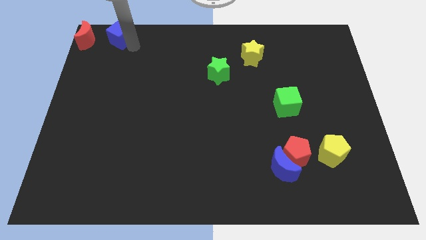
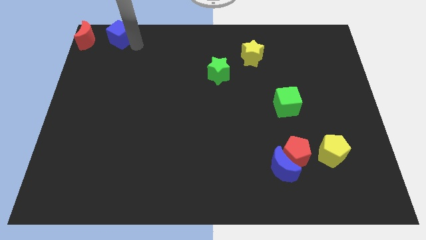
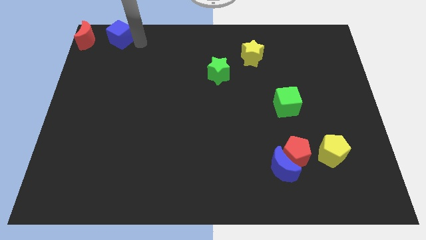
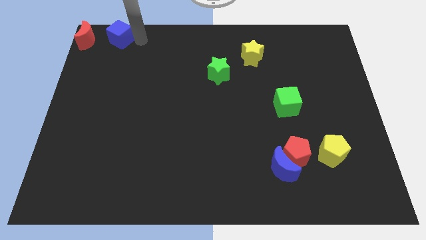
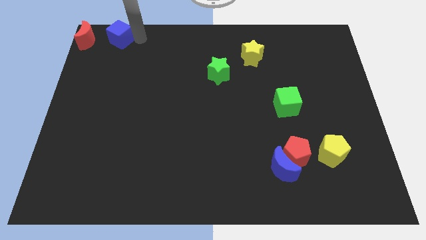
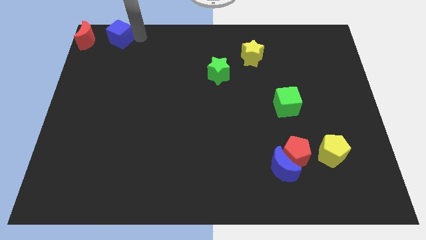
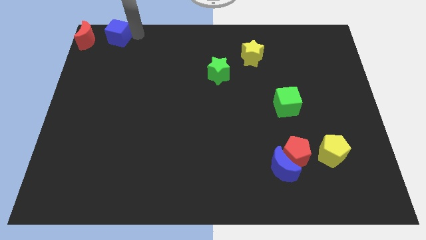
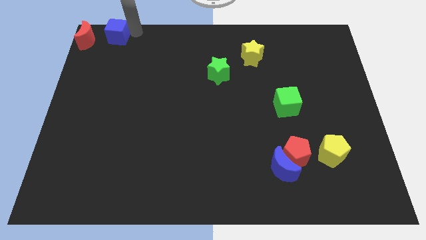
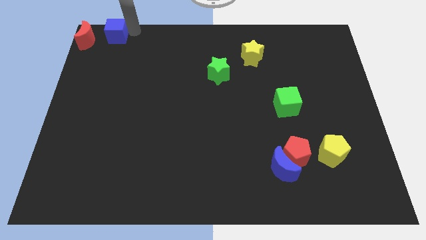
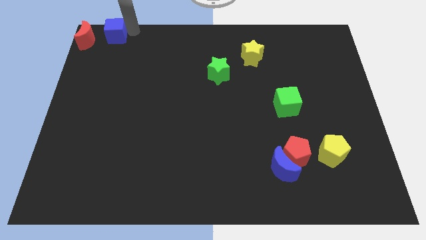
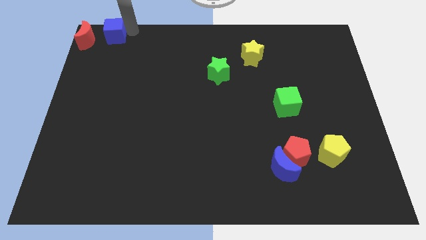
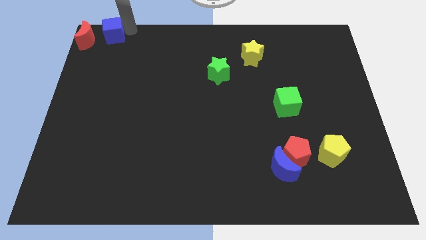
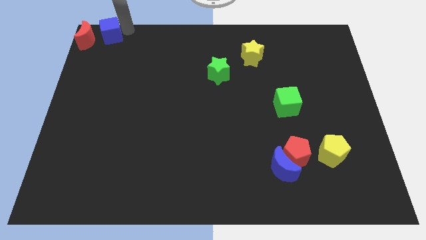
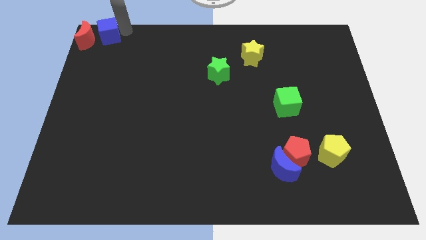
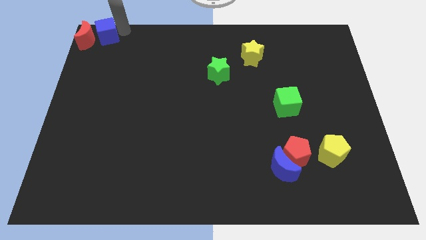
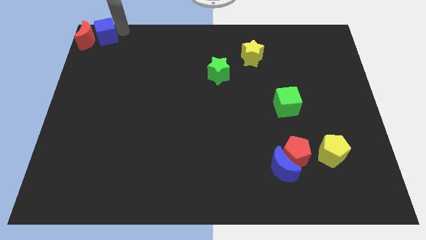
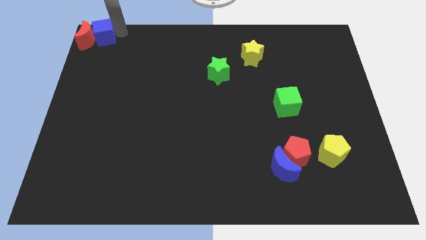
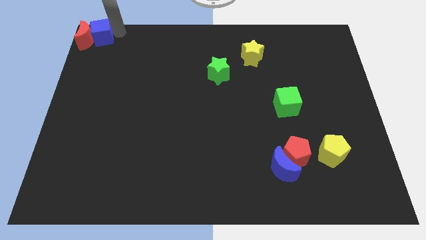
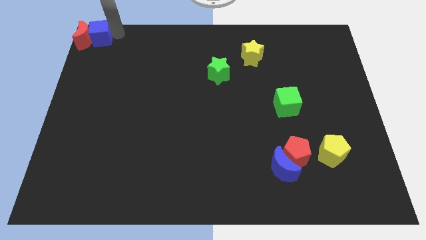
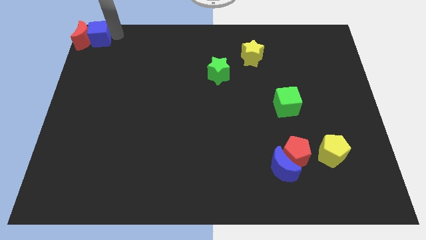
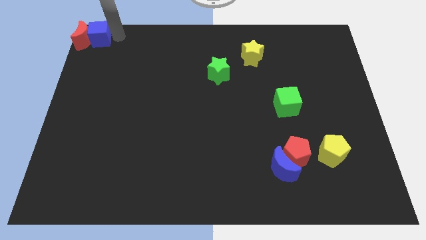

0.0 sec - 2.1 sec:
slide blue cube into red moon

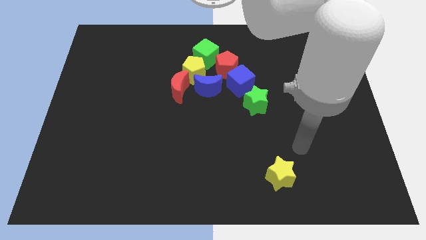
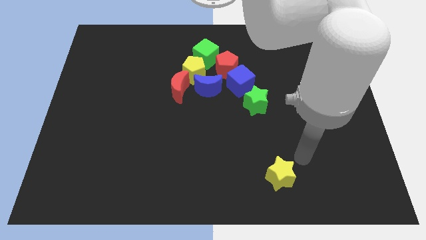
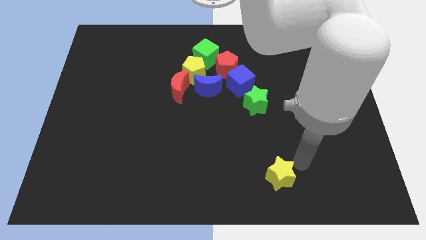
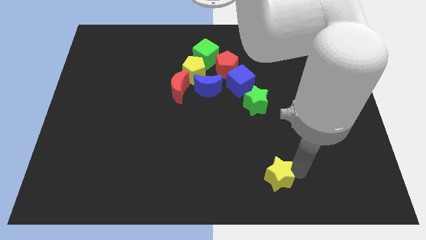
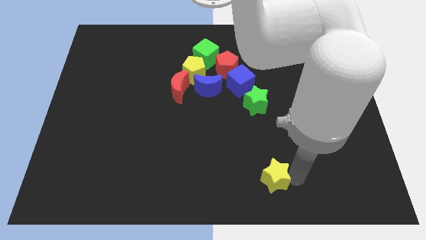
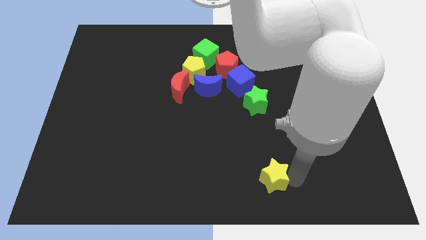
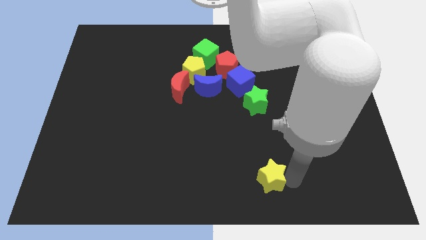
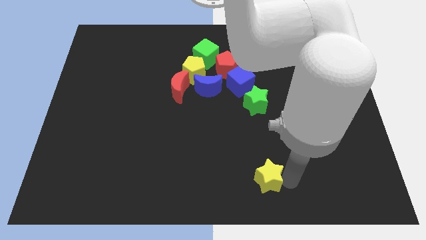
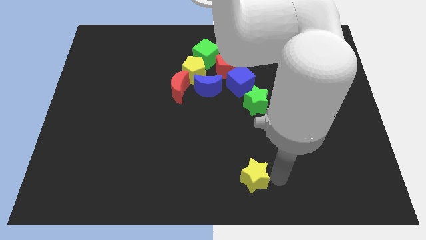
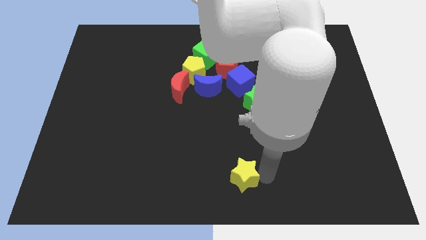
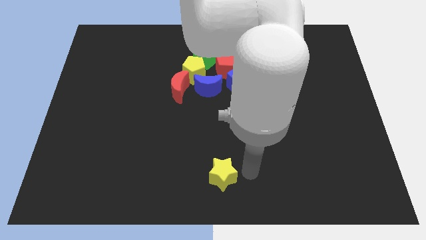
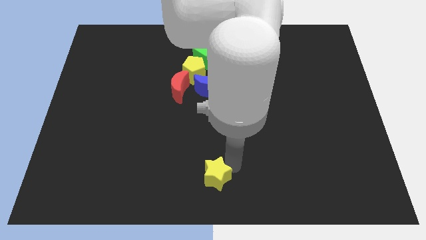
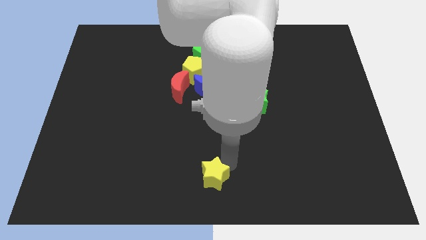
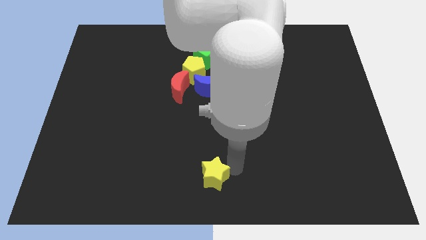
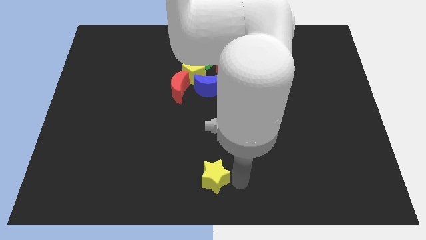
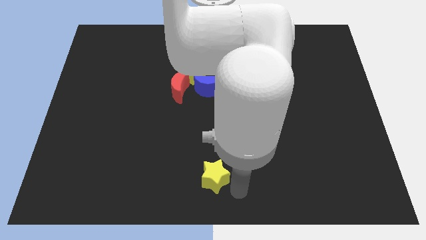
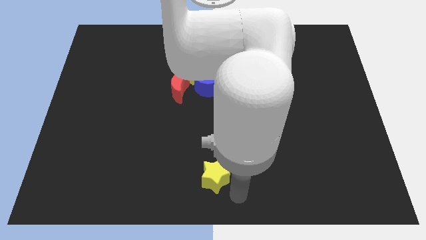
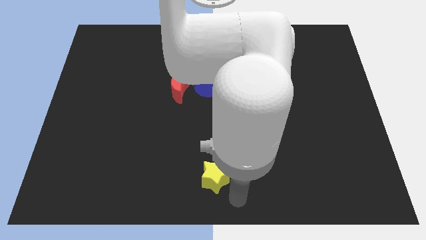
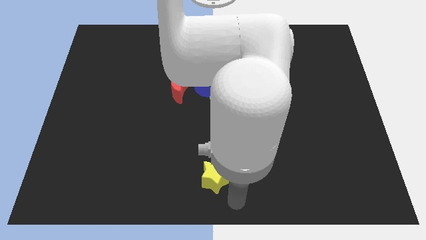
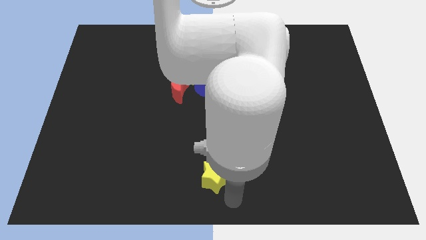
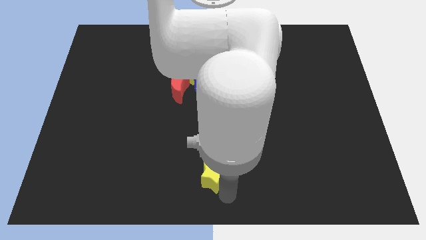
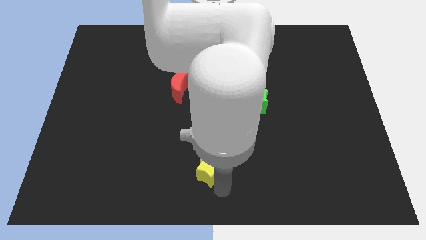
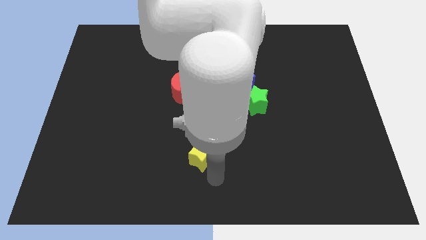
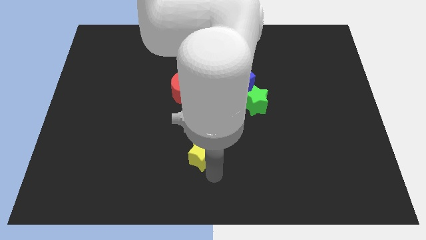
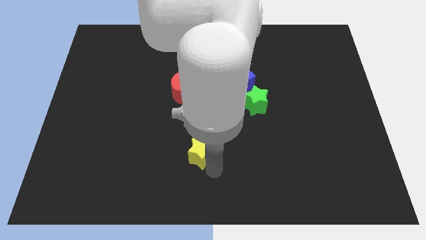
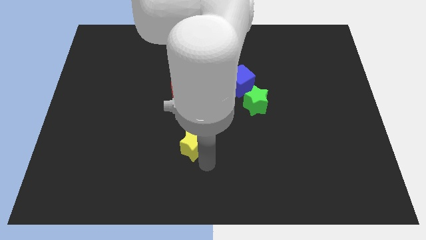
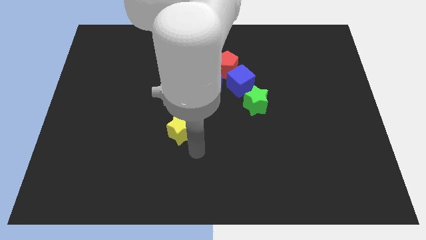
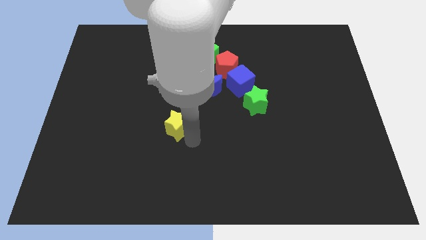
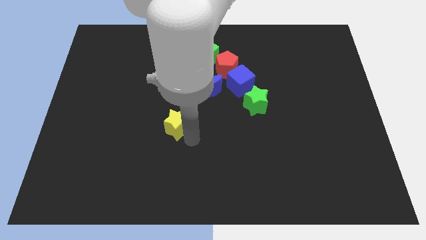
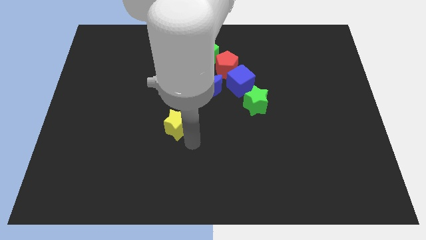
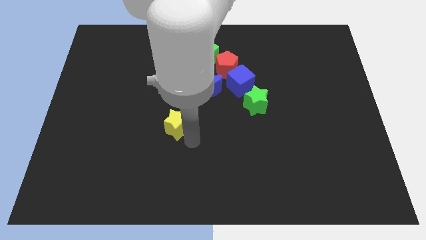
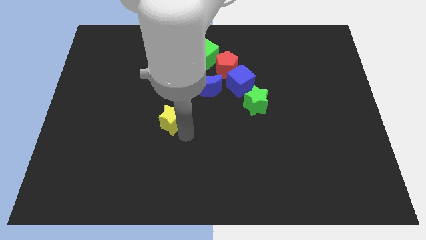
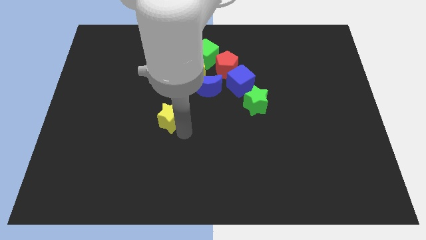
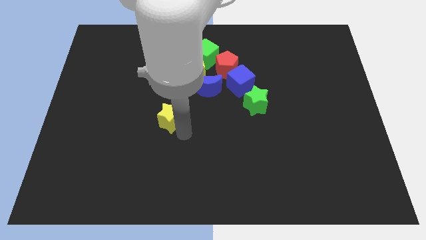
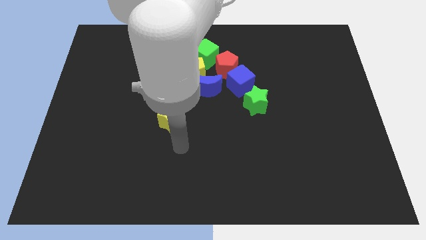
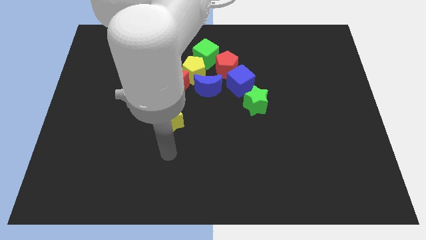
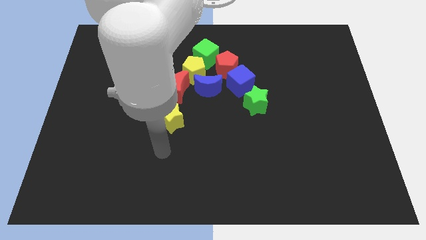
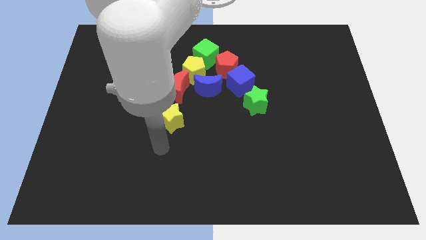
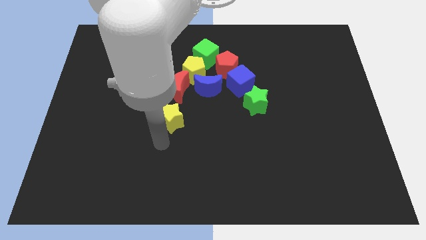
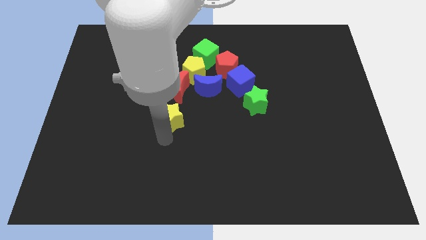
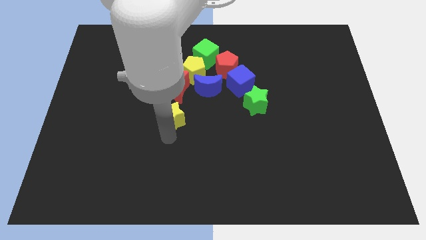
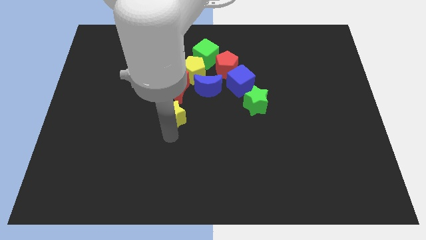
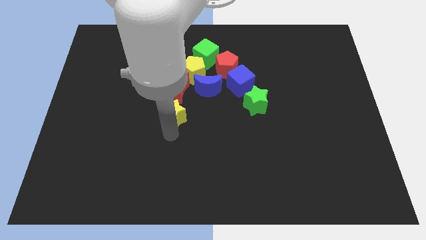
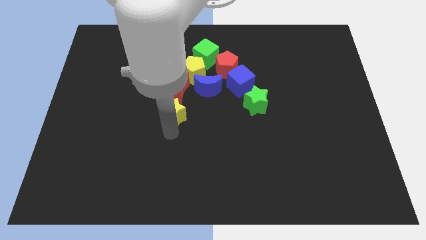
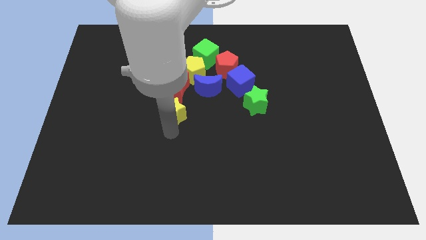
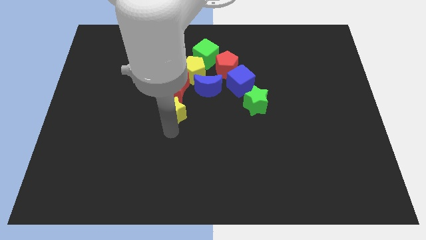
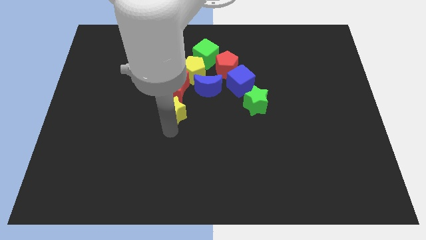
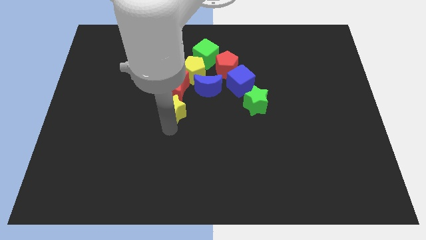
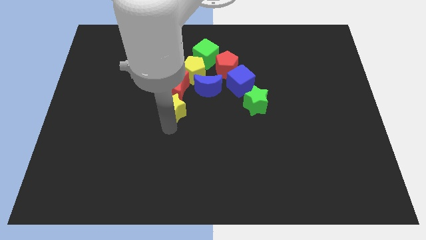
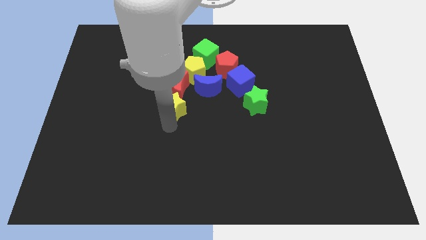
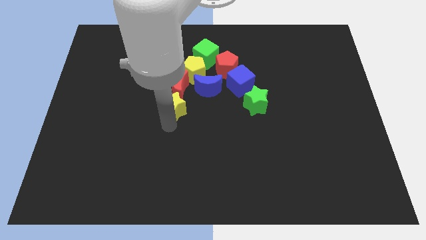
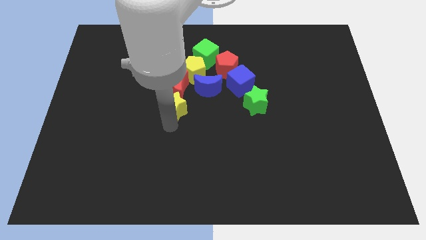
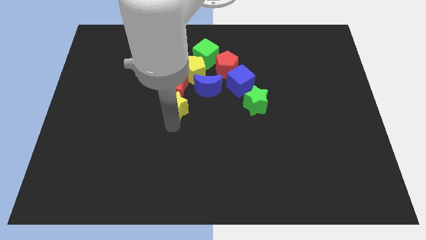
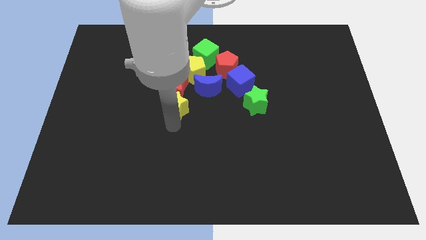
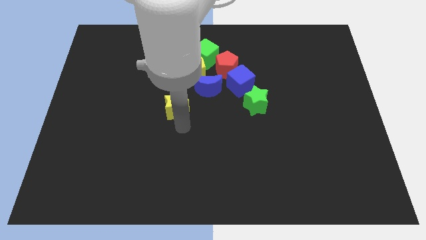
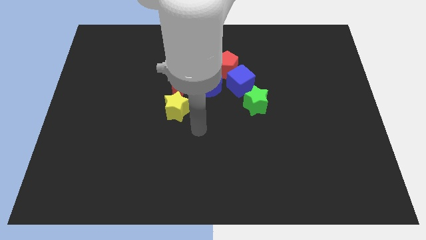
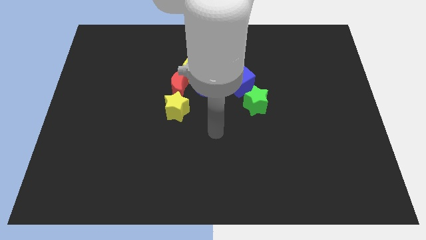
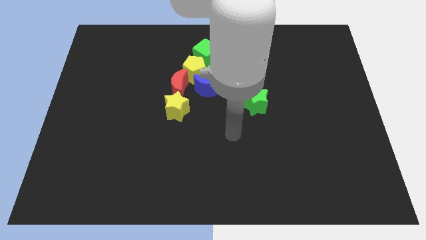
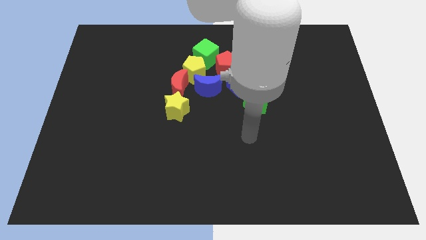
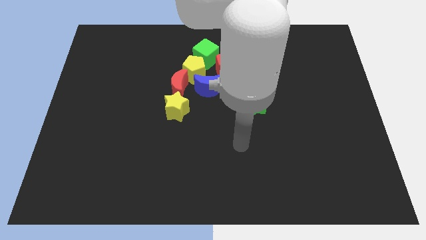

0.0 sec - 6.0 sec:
move the yellow star into red crecent

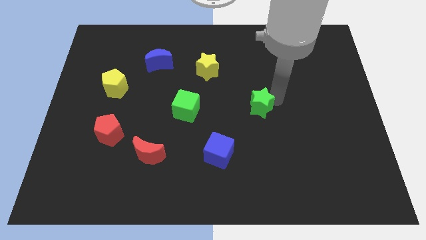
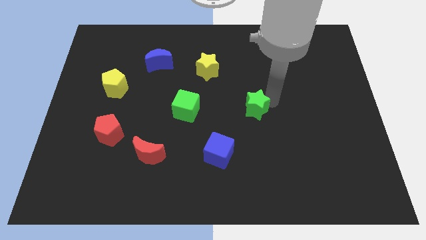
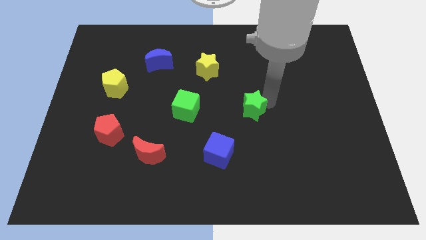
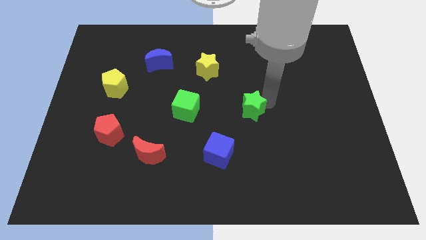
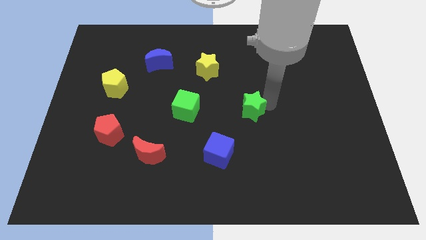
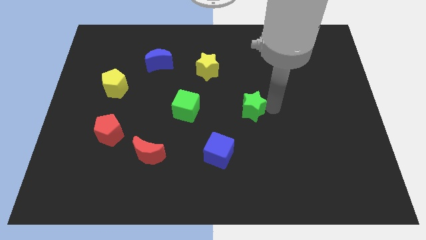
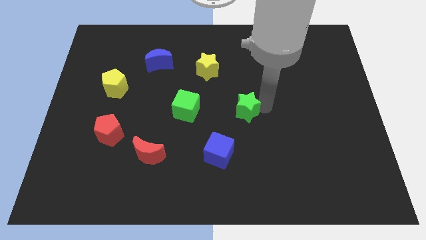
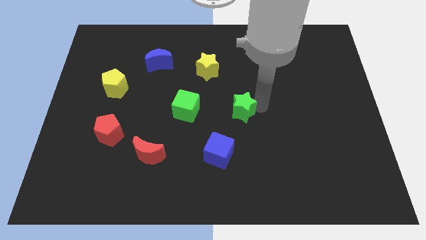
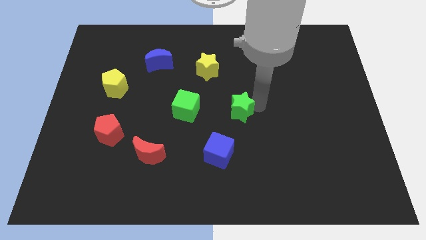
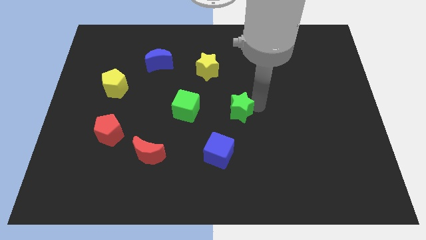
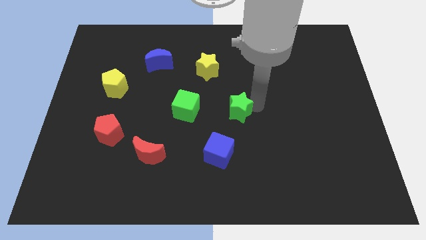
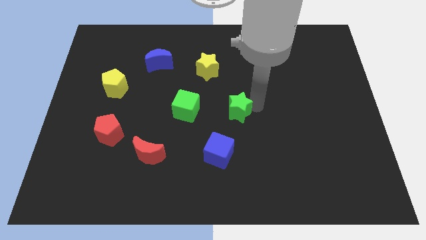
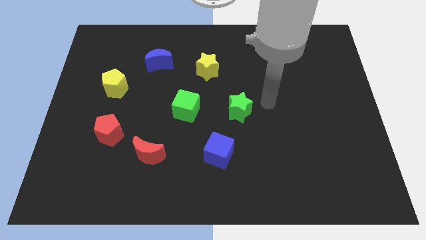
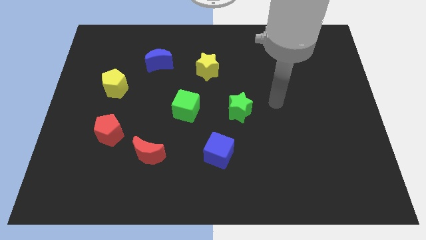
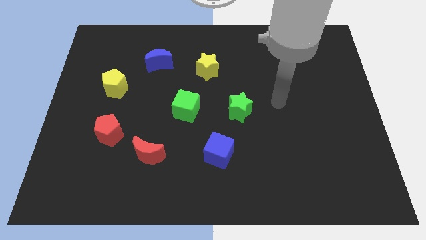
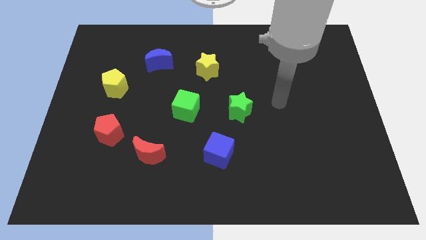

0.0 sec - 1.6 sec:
place the green star diagonally above blue cube
